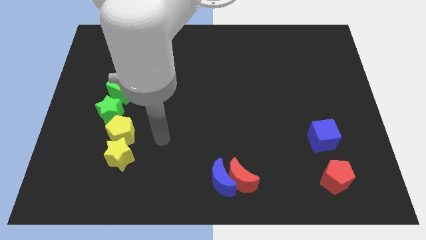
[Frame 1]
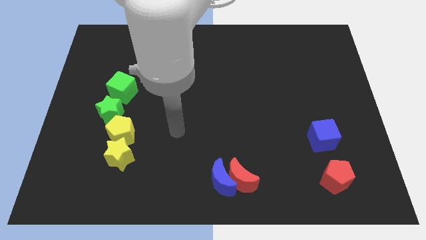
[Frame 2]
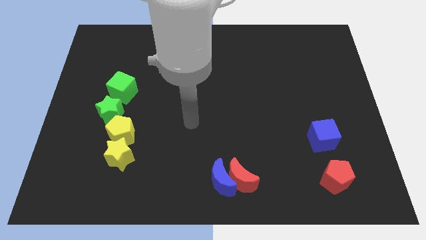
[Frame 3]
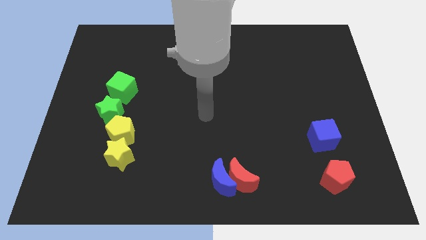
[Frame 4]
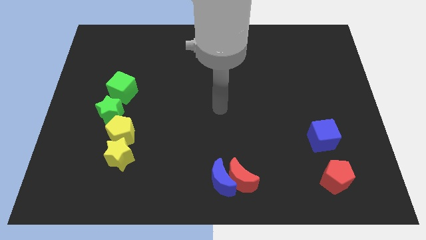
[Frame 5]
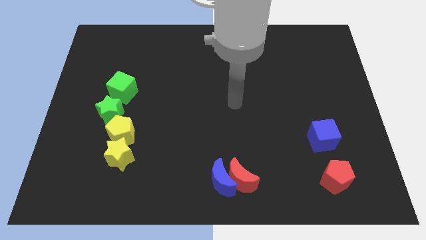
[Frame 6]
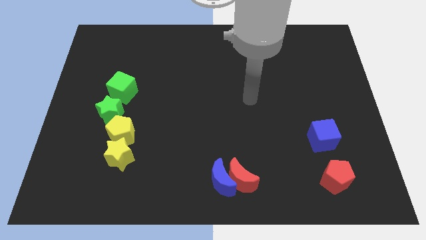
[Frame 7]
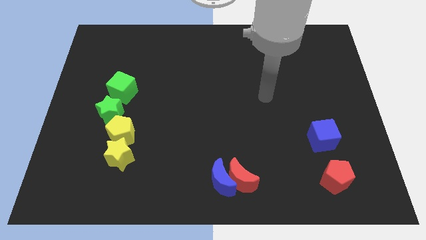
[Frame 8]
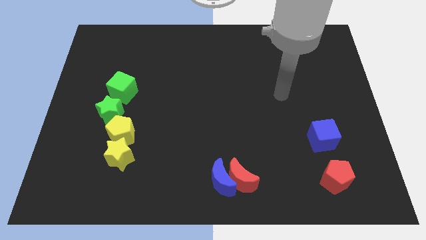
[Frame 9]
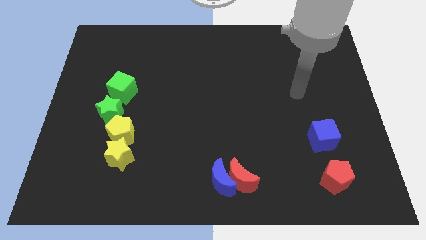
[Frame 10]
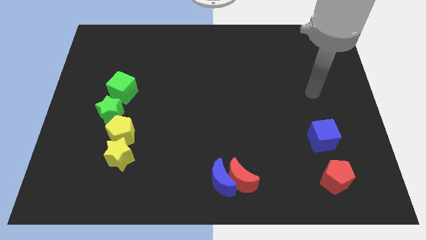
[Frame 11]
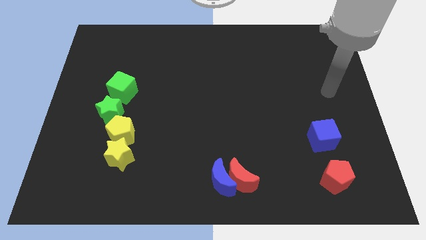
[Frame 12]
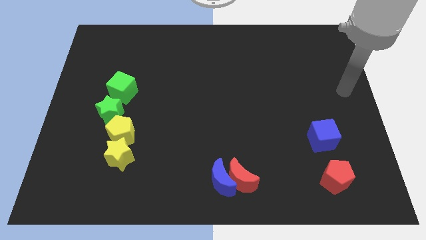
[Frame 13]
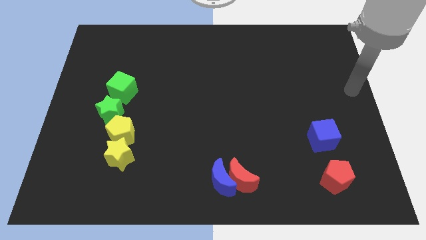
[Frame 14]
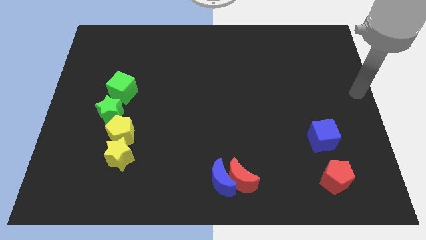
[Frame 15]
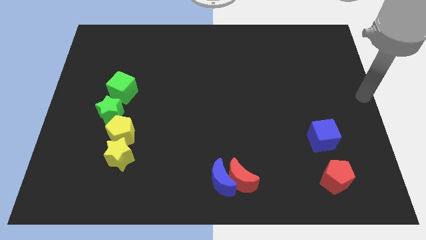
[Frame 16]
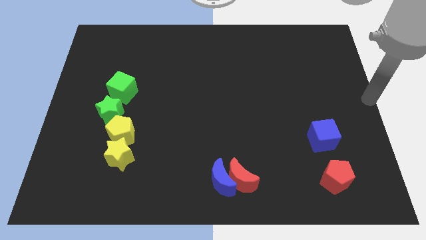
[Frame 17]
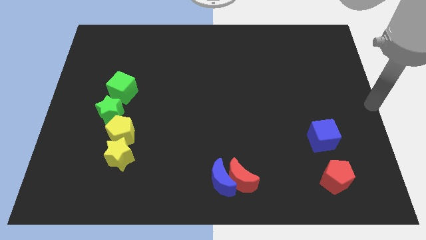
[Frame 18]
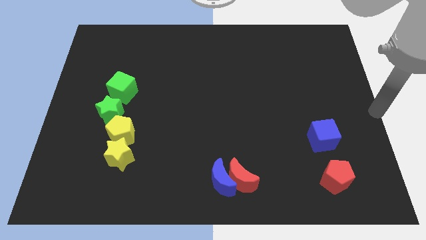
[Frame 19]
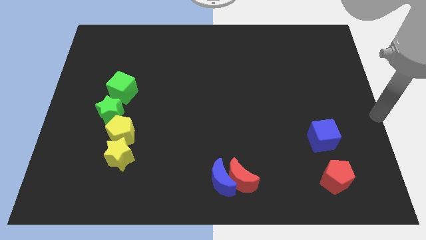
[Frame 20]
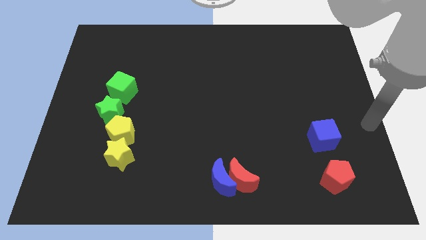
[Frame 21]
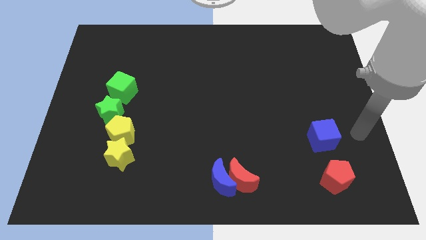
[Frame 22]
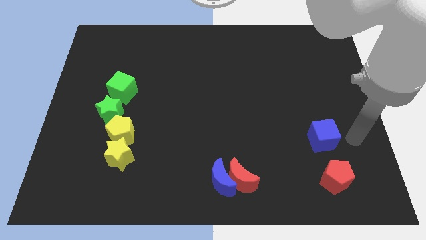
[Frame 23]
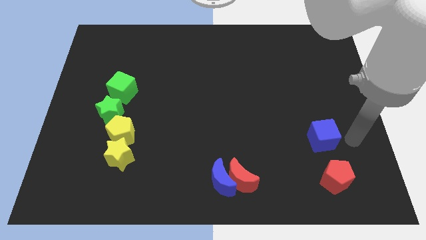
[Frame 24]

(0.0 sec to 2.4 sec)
point your arm at the right of the blue cube

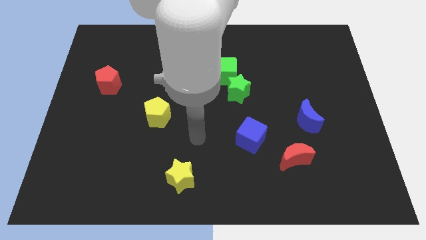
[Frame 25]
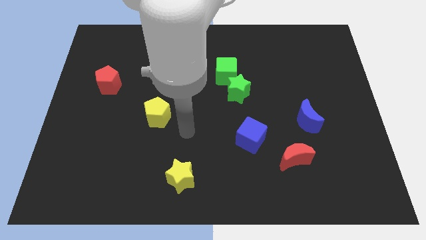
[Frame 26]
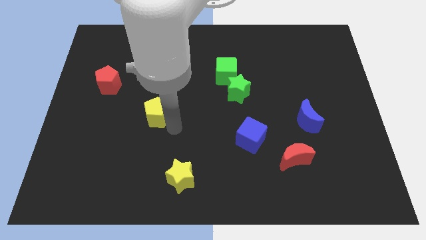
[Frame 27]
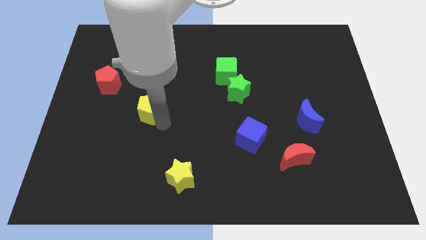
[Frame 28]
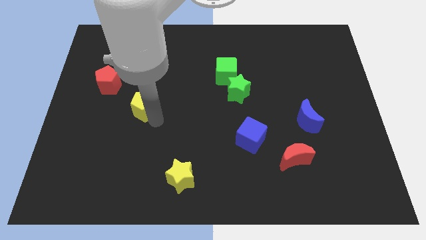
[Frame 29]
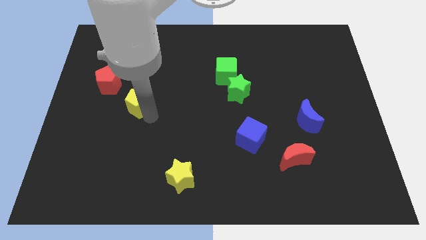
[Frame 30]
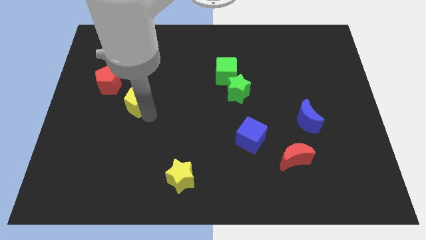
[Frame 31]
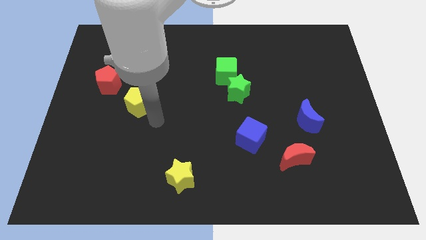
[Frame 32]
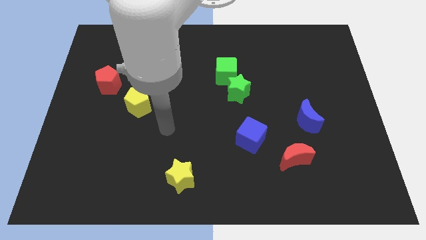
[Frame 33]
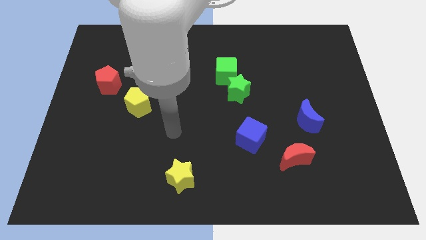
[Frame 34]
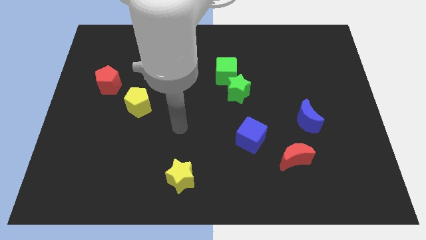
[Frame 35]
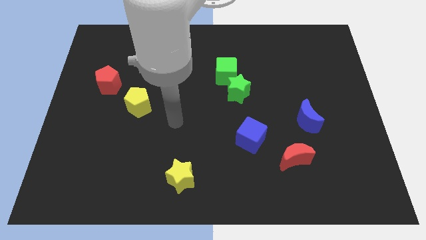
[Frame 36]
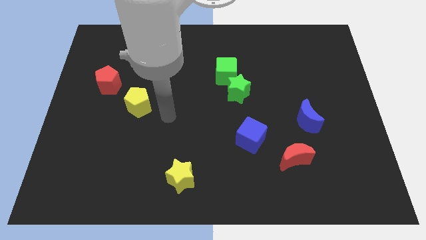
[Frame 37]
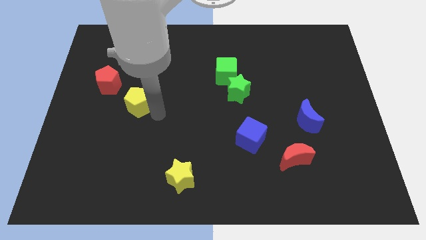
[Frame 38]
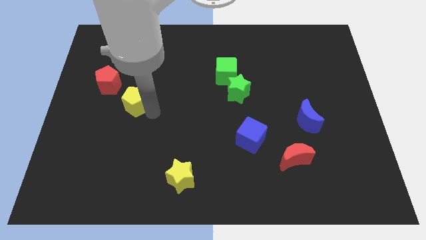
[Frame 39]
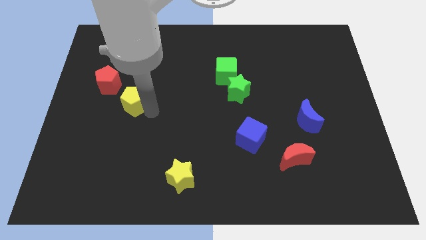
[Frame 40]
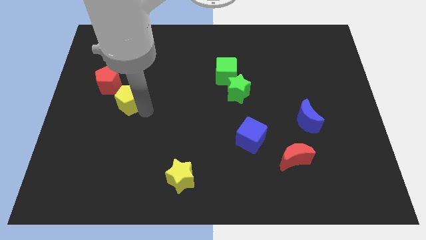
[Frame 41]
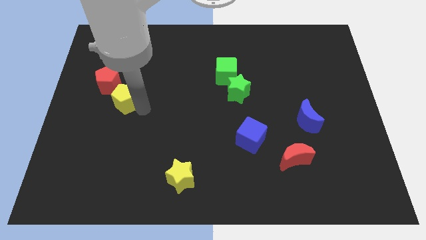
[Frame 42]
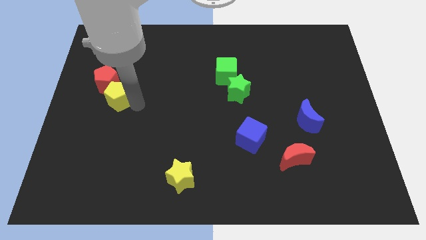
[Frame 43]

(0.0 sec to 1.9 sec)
place the yellow pentagon close to the red pentagon

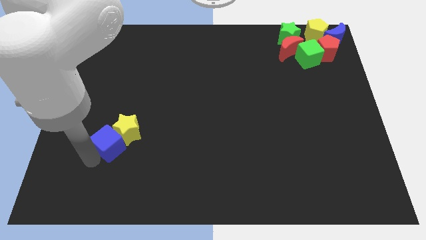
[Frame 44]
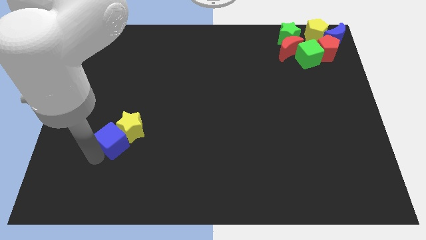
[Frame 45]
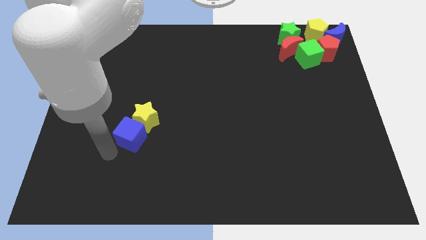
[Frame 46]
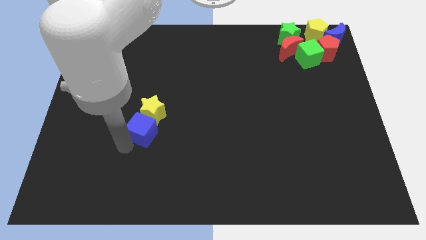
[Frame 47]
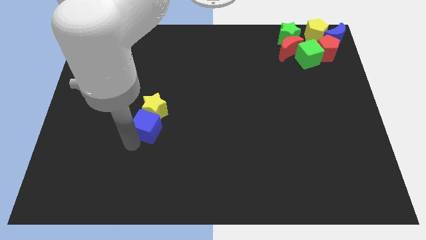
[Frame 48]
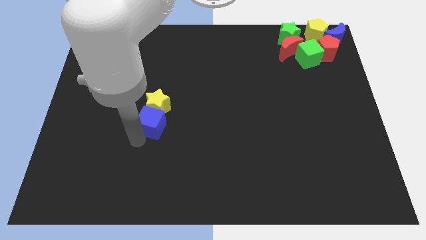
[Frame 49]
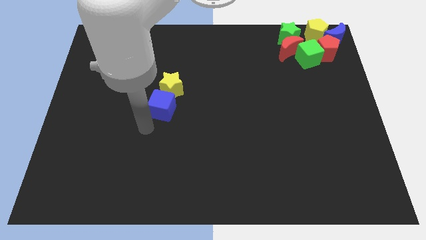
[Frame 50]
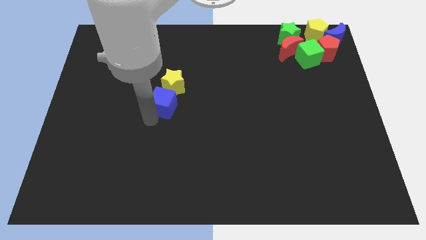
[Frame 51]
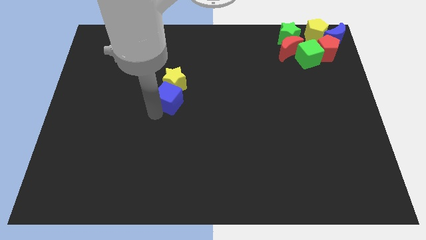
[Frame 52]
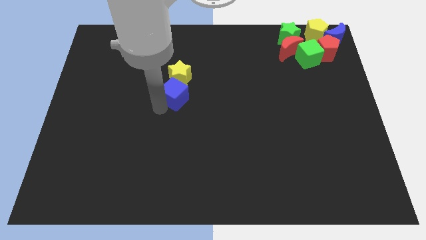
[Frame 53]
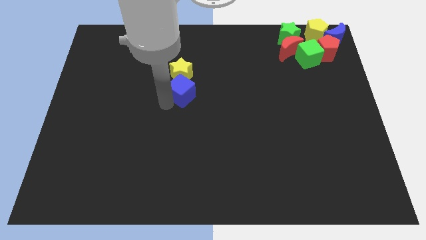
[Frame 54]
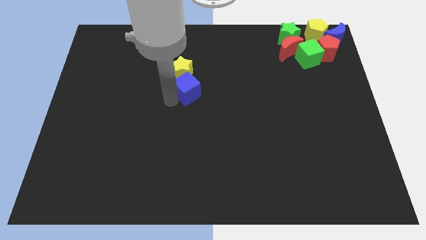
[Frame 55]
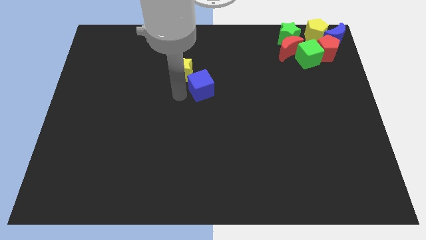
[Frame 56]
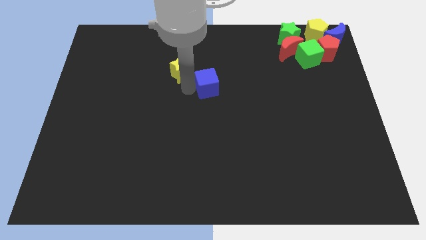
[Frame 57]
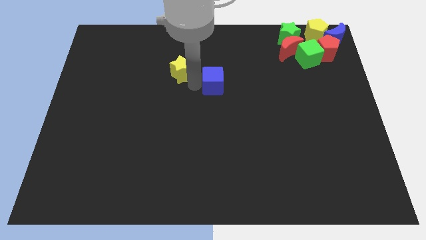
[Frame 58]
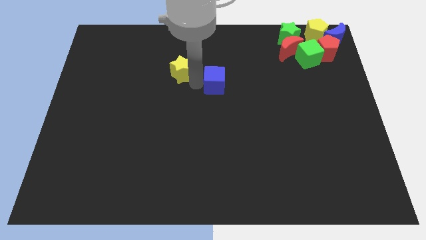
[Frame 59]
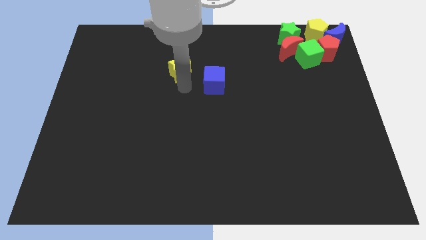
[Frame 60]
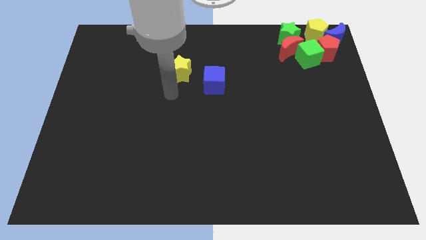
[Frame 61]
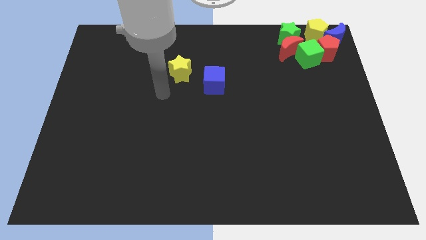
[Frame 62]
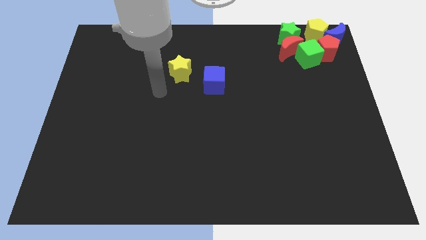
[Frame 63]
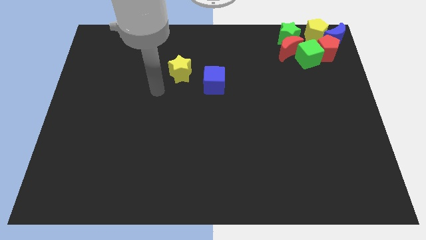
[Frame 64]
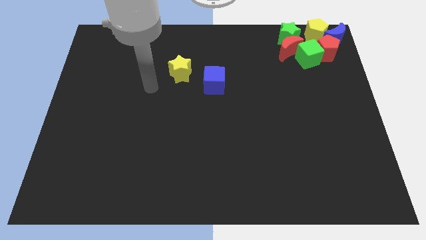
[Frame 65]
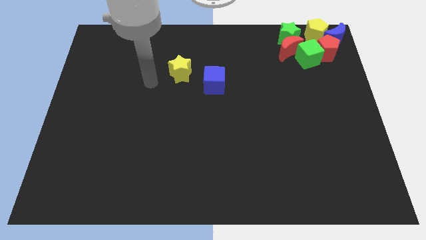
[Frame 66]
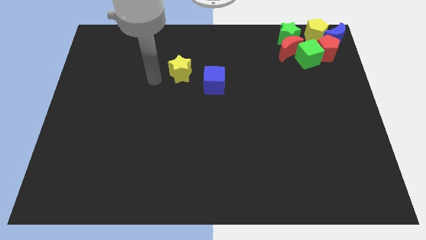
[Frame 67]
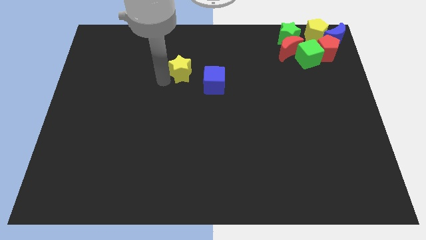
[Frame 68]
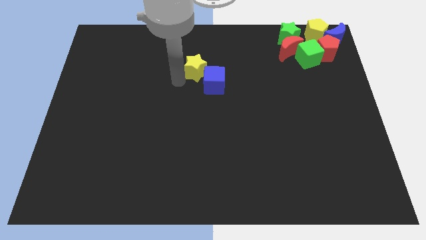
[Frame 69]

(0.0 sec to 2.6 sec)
move the yellow star and blue cube to the center

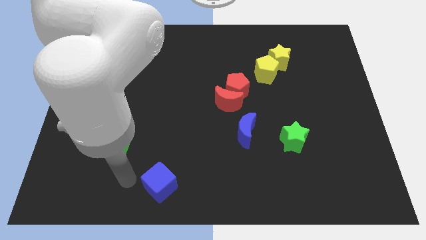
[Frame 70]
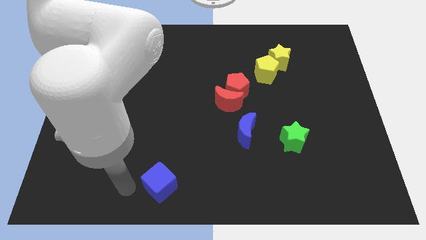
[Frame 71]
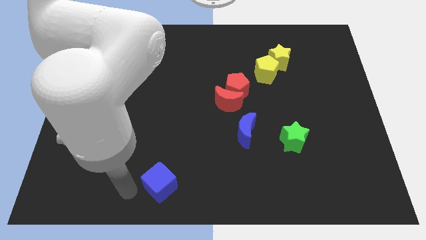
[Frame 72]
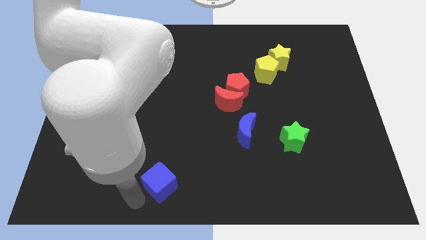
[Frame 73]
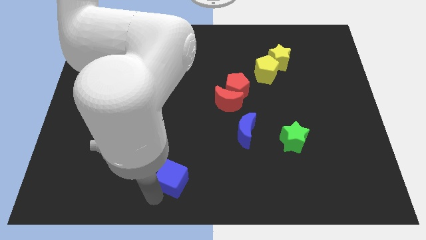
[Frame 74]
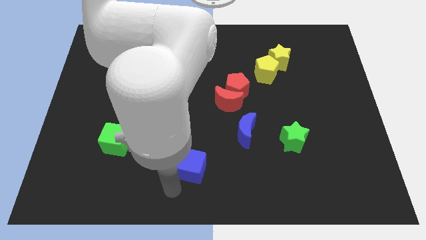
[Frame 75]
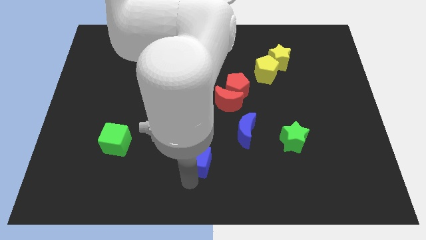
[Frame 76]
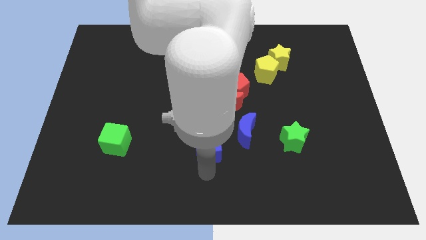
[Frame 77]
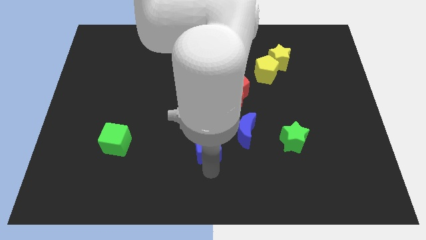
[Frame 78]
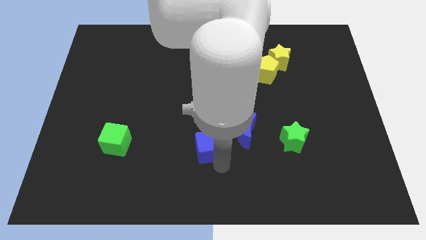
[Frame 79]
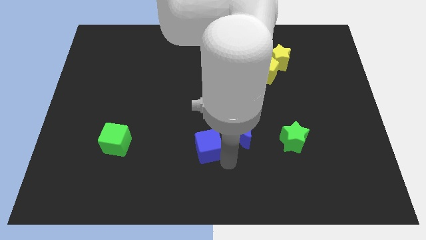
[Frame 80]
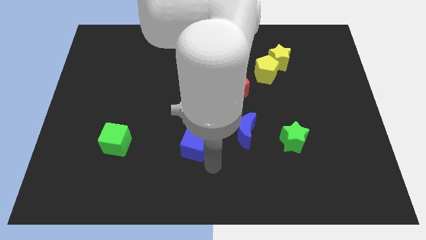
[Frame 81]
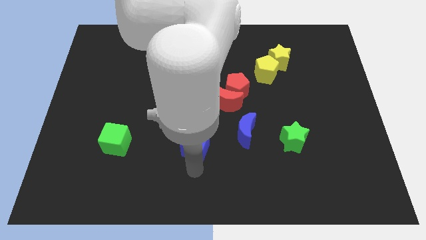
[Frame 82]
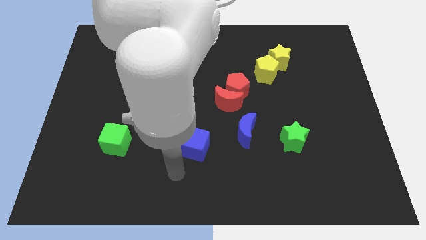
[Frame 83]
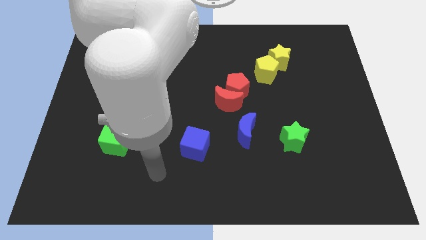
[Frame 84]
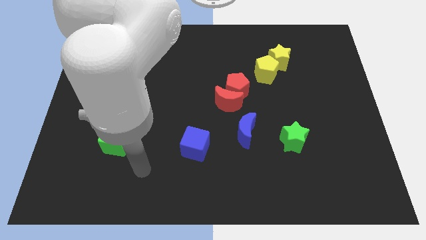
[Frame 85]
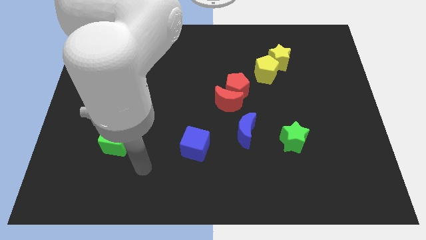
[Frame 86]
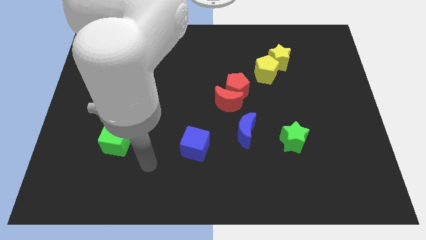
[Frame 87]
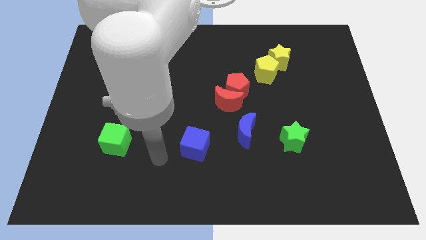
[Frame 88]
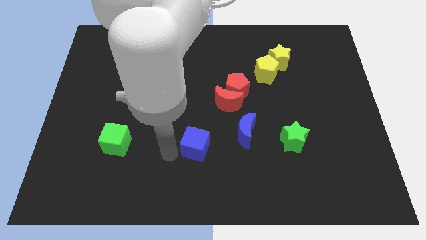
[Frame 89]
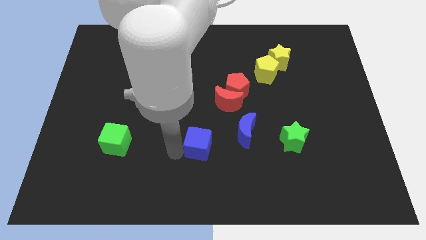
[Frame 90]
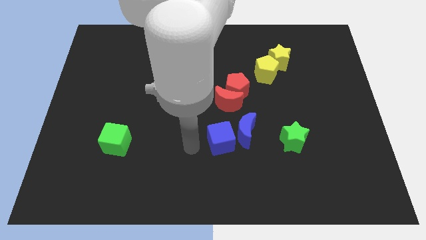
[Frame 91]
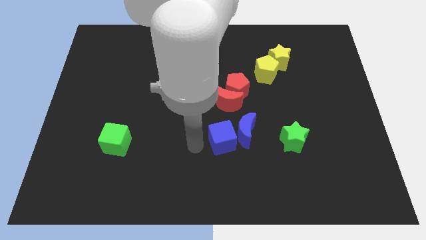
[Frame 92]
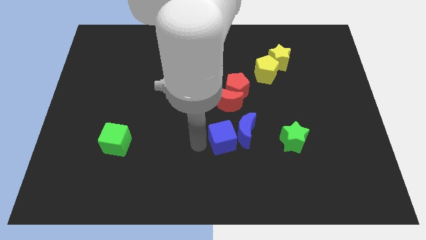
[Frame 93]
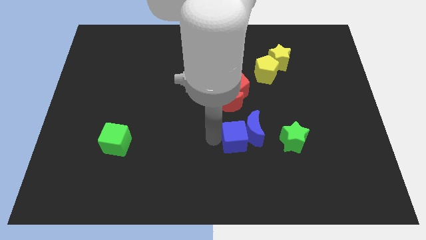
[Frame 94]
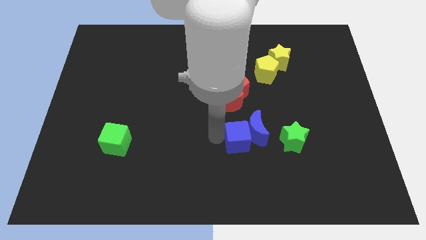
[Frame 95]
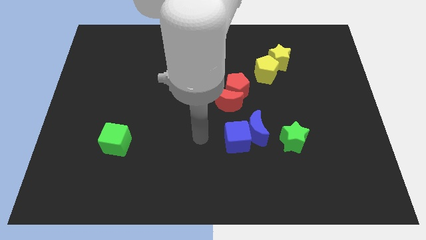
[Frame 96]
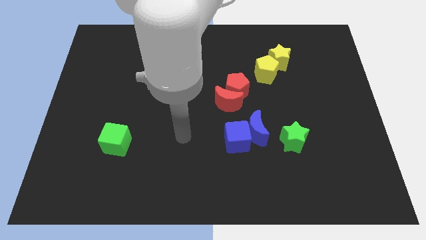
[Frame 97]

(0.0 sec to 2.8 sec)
push the blue cube into the blue crescent
